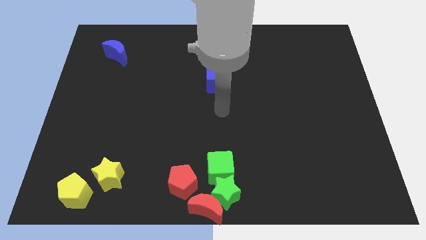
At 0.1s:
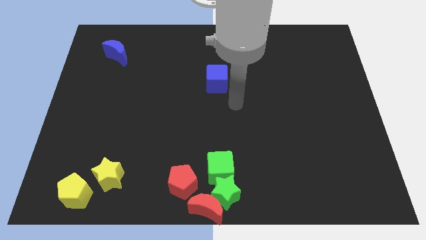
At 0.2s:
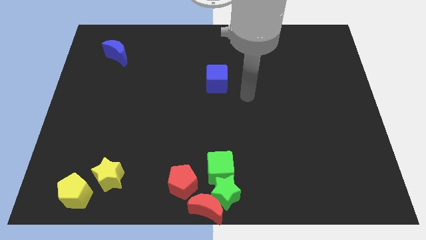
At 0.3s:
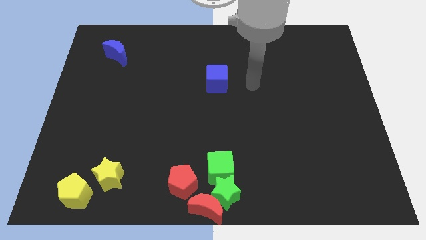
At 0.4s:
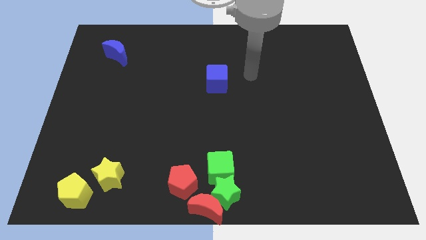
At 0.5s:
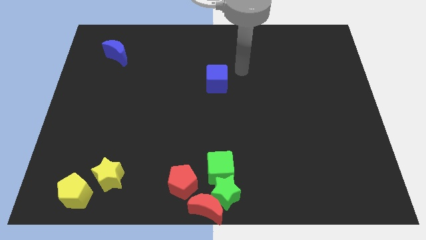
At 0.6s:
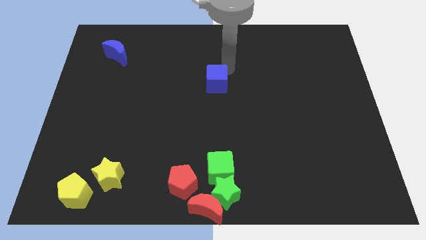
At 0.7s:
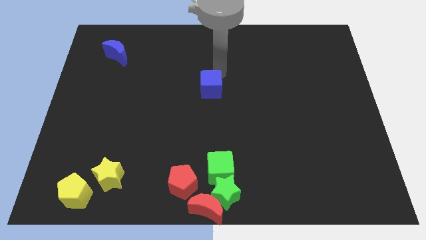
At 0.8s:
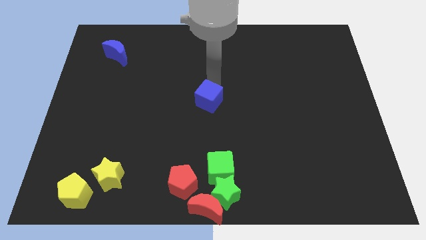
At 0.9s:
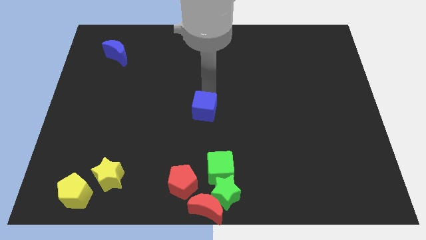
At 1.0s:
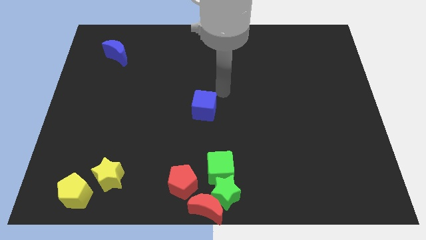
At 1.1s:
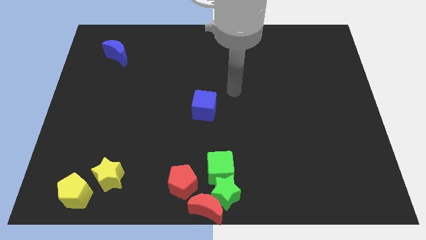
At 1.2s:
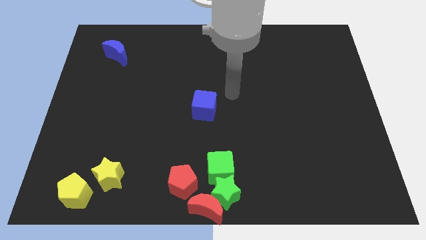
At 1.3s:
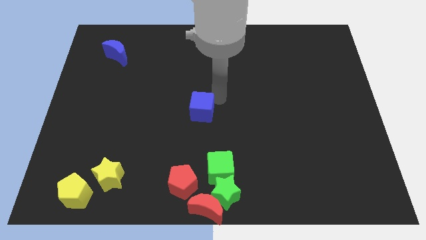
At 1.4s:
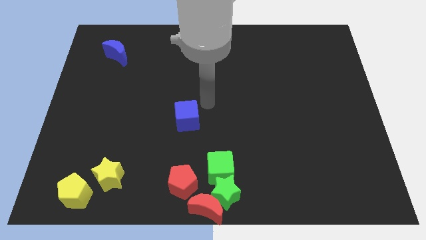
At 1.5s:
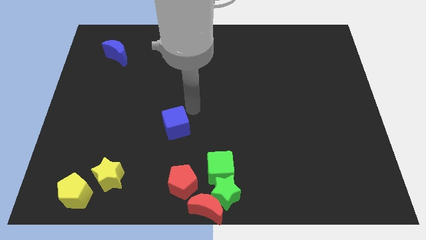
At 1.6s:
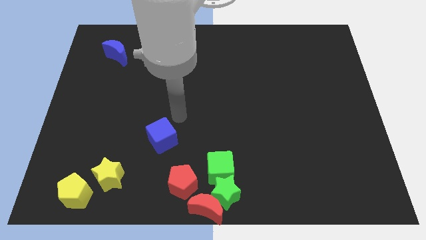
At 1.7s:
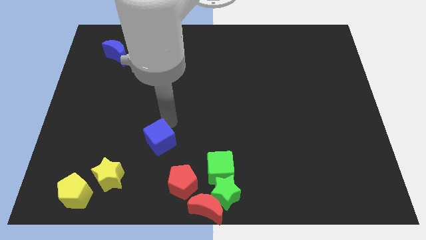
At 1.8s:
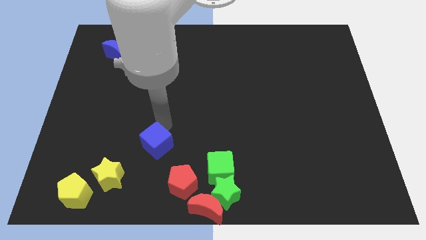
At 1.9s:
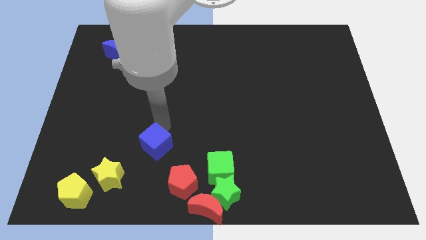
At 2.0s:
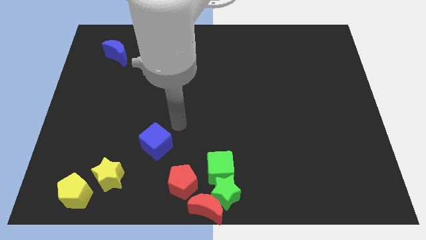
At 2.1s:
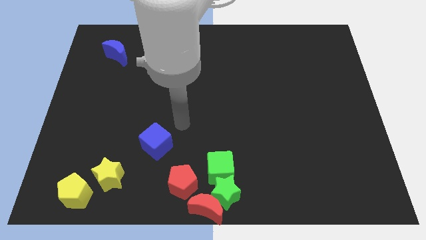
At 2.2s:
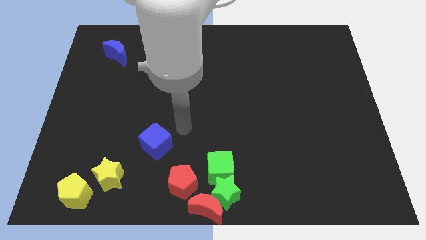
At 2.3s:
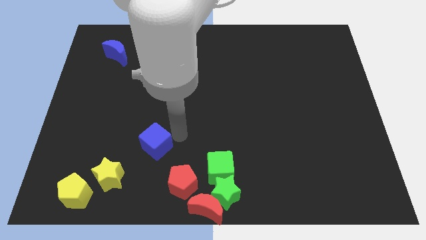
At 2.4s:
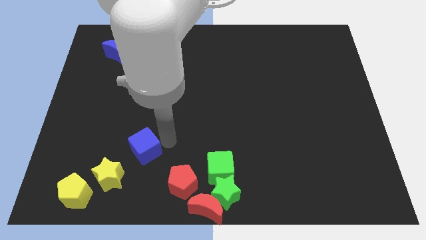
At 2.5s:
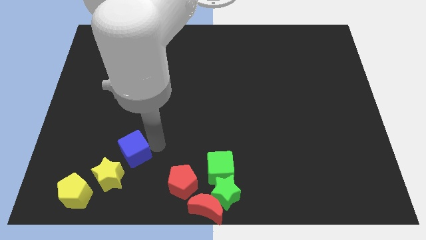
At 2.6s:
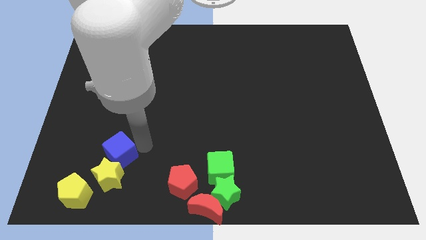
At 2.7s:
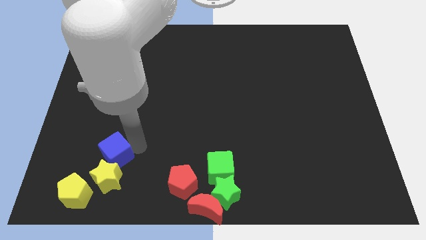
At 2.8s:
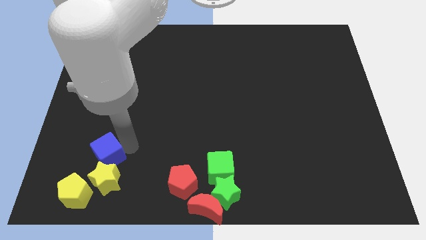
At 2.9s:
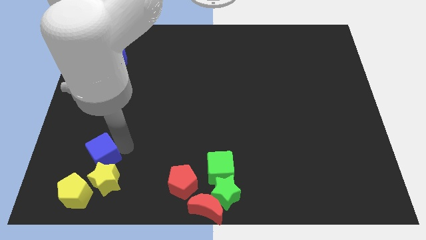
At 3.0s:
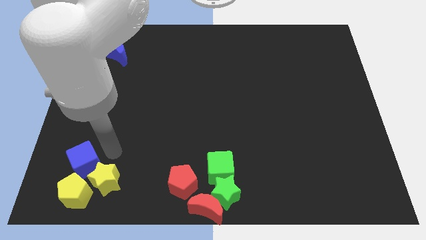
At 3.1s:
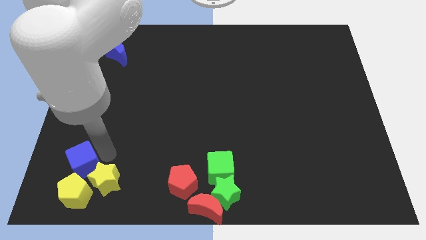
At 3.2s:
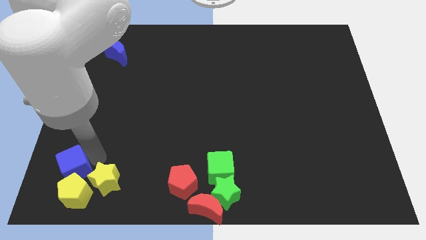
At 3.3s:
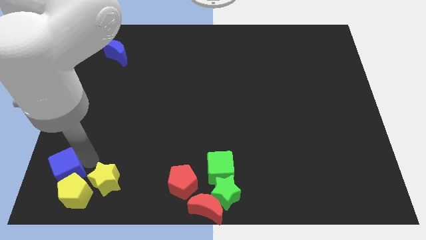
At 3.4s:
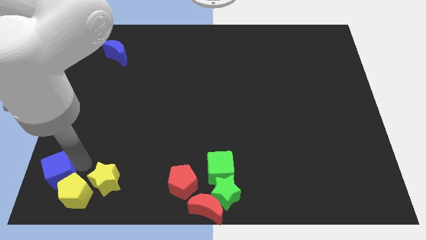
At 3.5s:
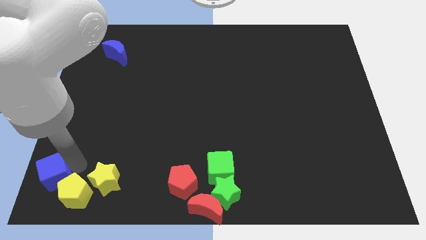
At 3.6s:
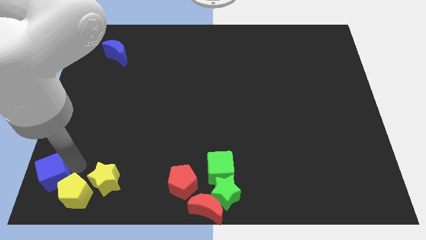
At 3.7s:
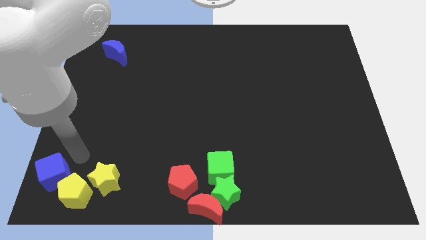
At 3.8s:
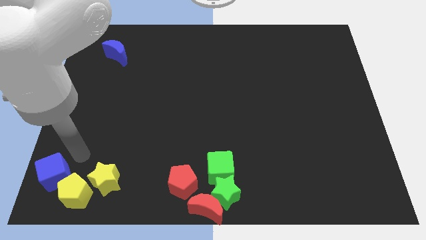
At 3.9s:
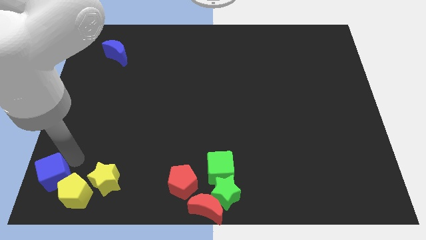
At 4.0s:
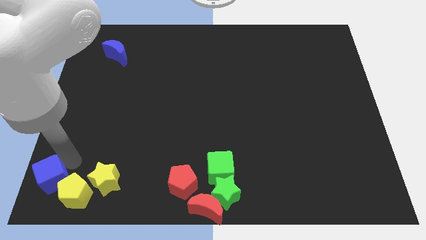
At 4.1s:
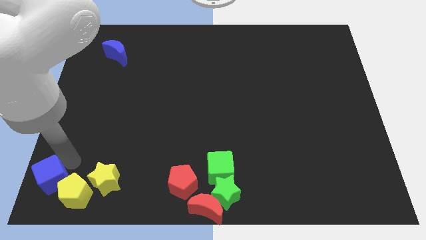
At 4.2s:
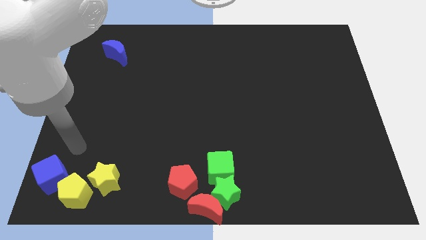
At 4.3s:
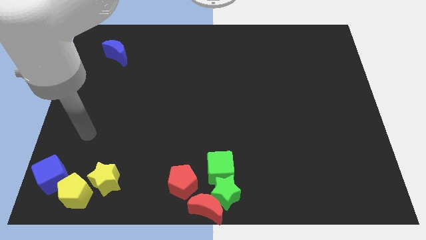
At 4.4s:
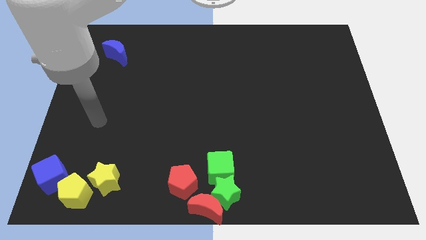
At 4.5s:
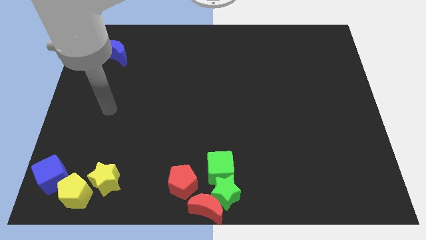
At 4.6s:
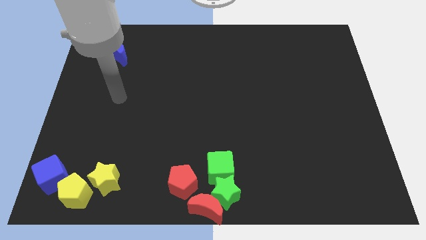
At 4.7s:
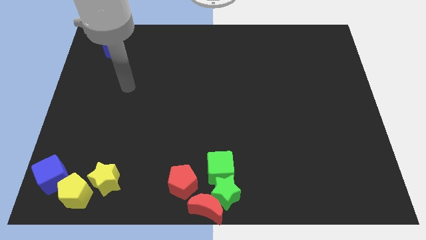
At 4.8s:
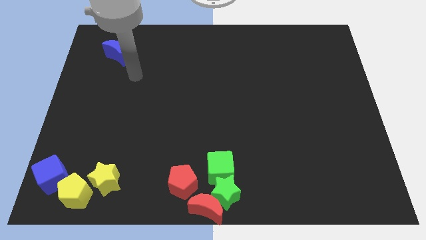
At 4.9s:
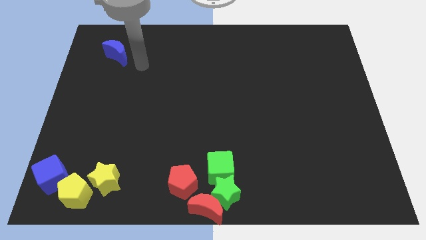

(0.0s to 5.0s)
move blue cube to the bottom left corner of the board

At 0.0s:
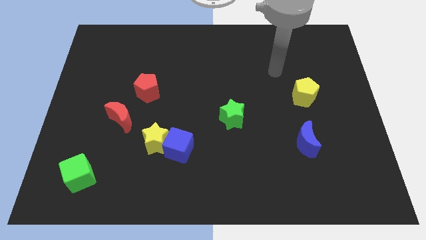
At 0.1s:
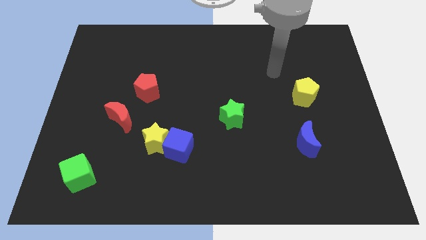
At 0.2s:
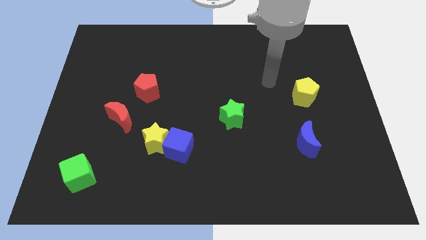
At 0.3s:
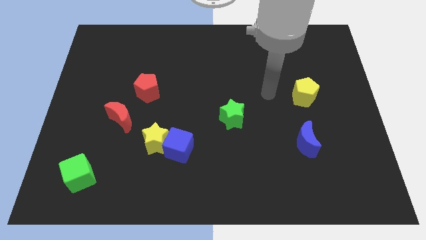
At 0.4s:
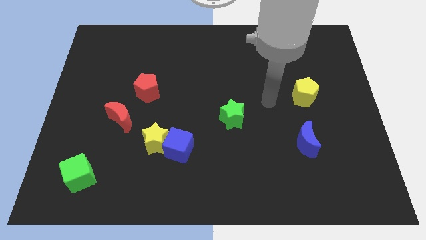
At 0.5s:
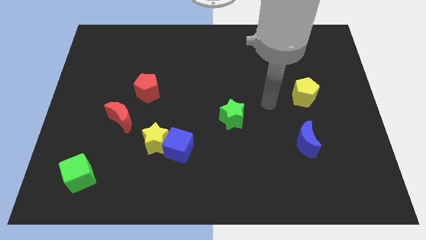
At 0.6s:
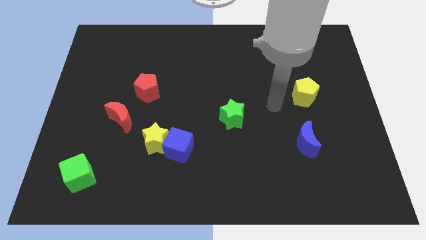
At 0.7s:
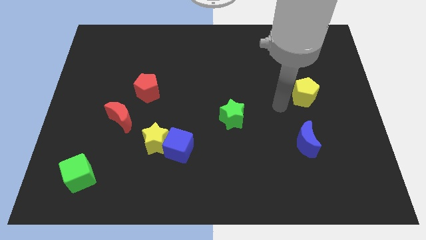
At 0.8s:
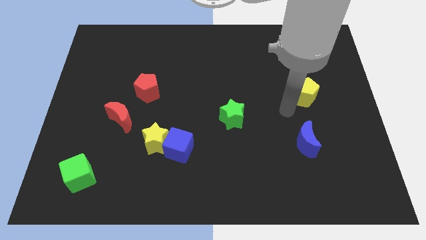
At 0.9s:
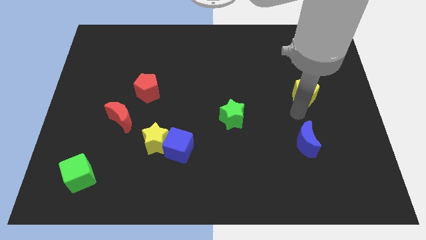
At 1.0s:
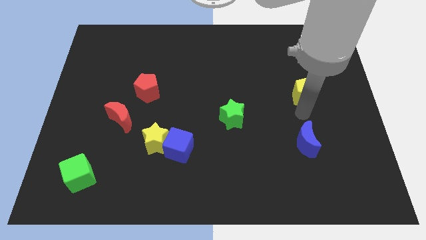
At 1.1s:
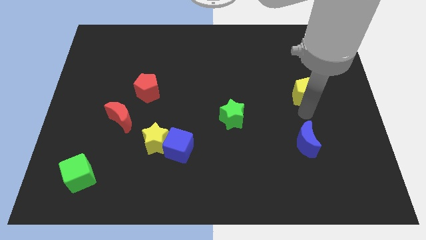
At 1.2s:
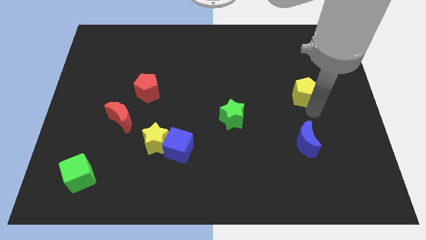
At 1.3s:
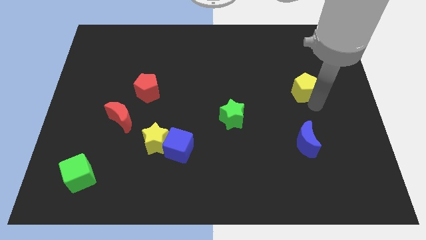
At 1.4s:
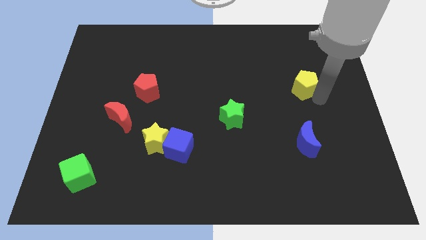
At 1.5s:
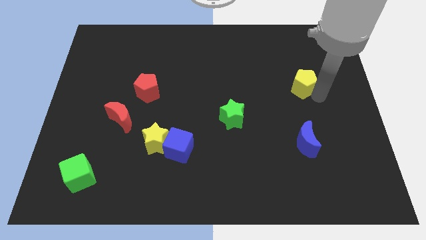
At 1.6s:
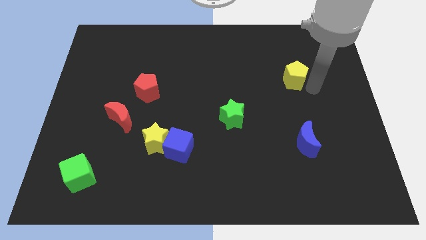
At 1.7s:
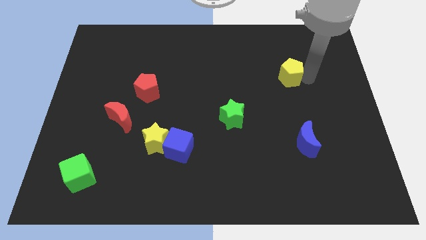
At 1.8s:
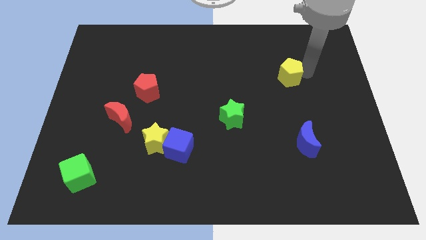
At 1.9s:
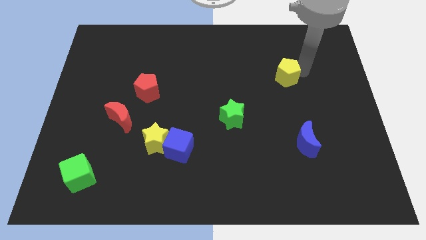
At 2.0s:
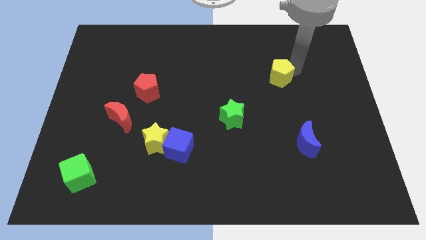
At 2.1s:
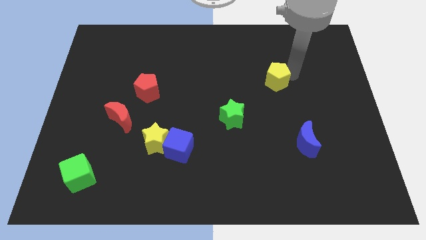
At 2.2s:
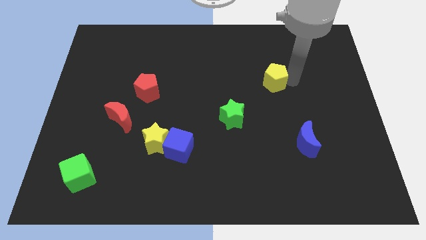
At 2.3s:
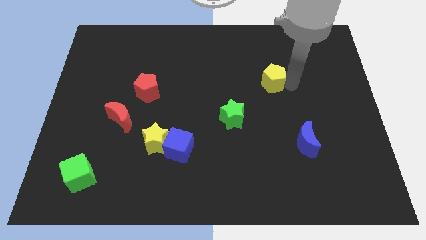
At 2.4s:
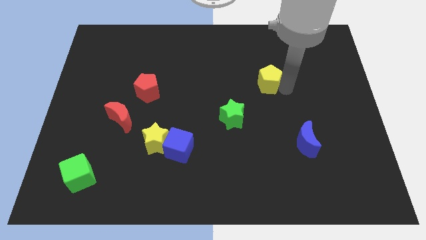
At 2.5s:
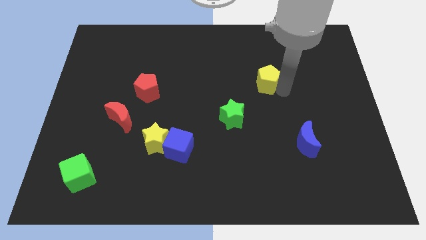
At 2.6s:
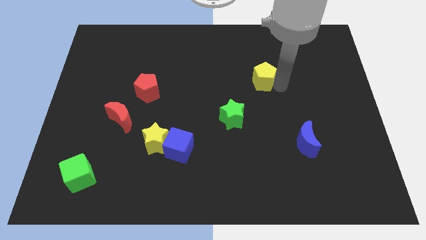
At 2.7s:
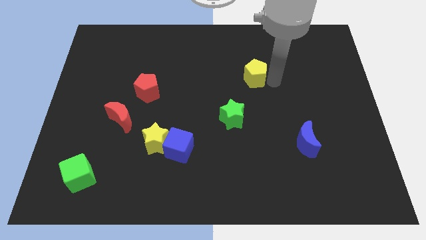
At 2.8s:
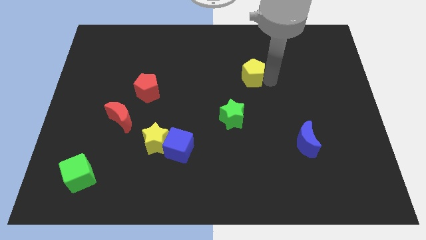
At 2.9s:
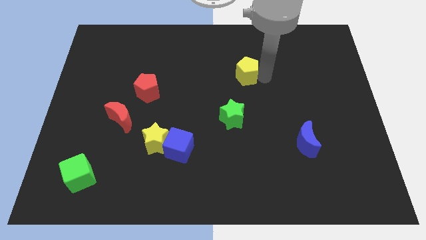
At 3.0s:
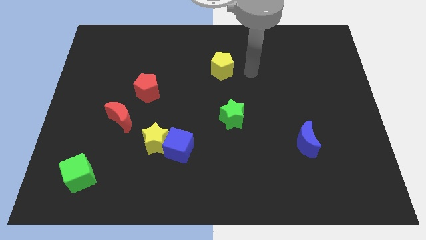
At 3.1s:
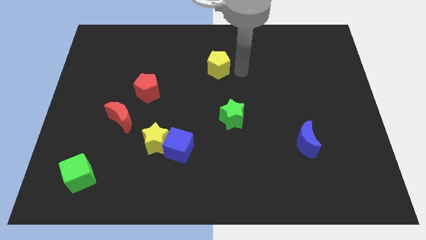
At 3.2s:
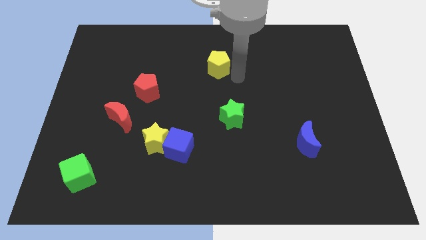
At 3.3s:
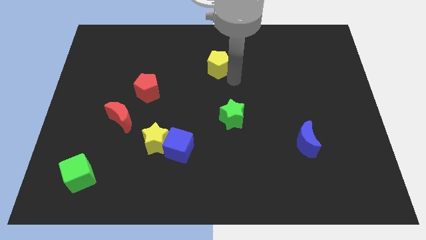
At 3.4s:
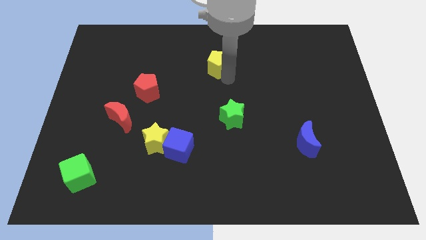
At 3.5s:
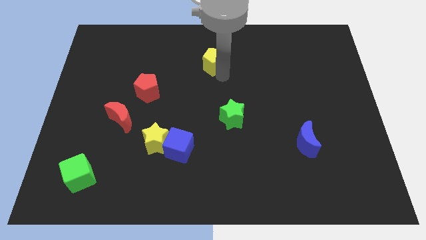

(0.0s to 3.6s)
move the yellow pentagon to the top center

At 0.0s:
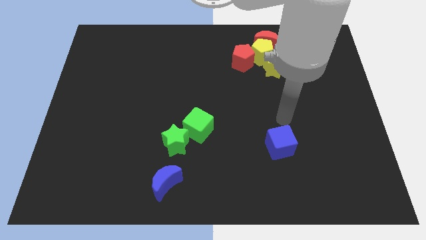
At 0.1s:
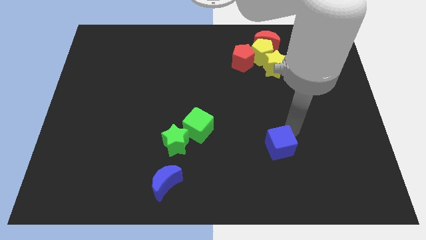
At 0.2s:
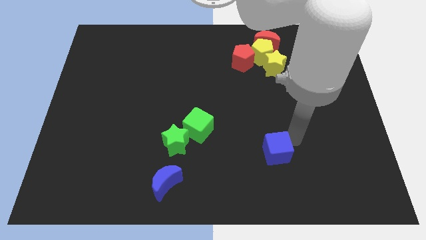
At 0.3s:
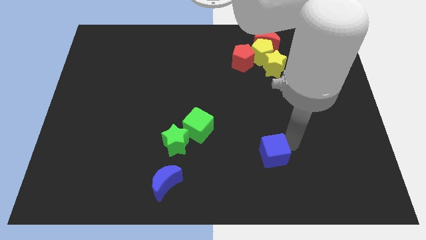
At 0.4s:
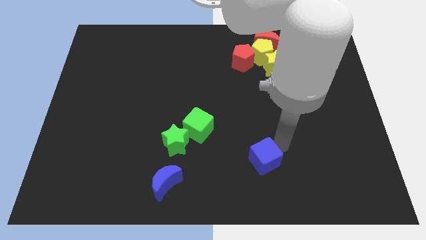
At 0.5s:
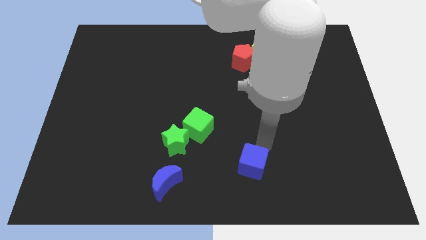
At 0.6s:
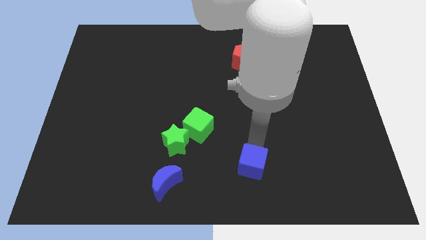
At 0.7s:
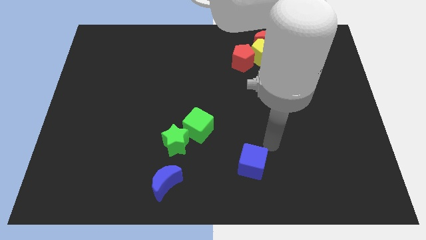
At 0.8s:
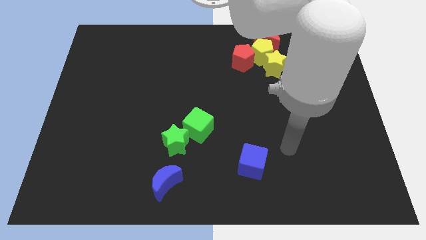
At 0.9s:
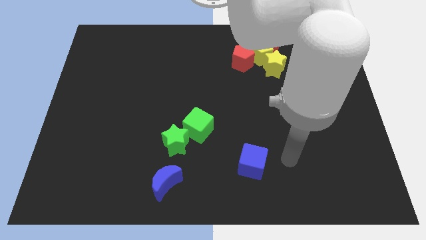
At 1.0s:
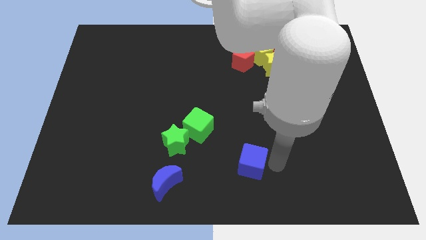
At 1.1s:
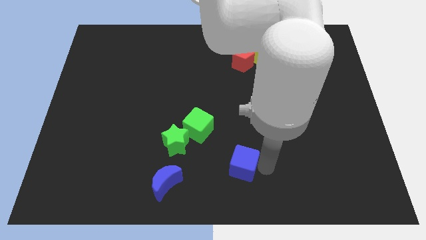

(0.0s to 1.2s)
push blue cube below red pentagon
